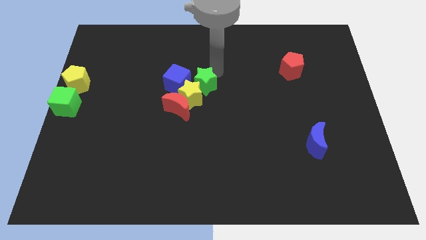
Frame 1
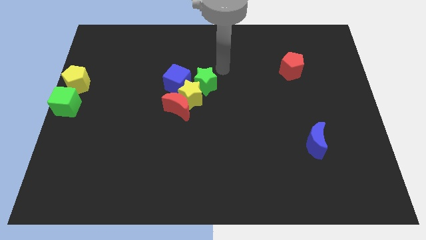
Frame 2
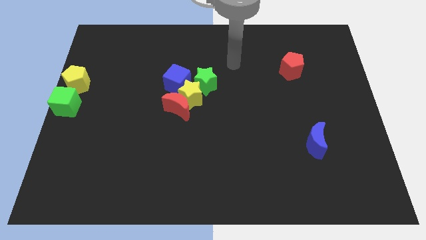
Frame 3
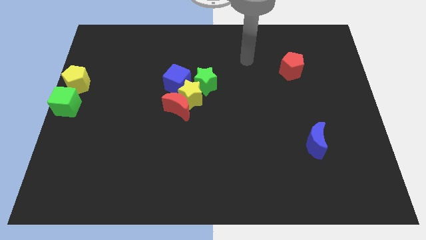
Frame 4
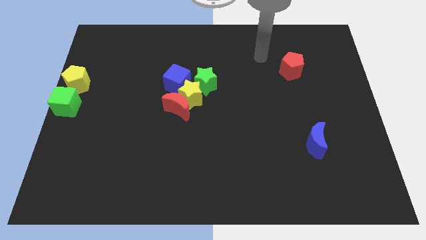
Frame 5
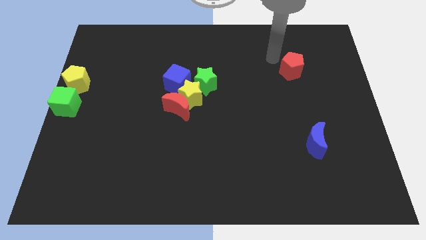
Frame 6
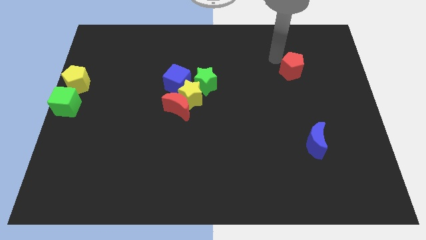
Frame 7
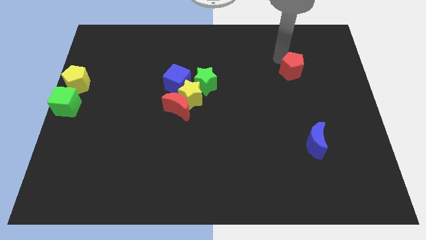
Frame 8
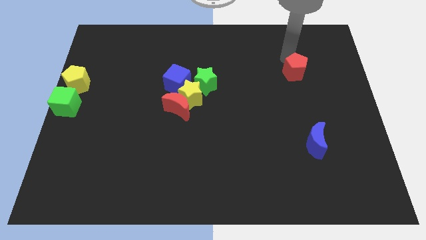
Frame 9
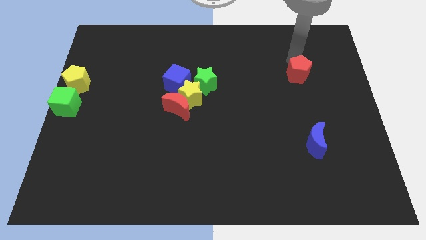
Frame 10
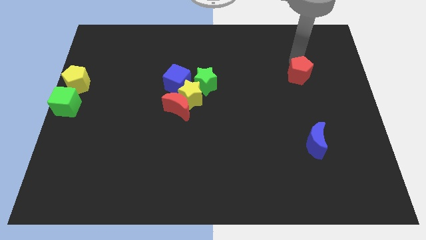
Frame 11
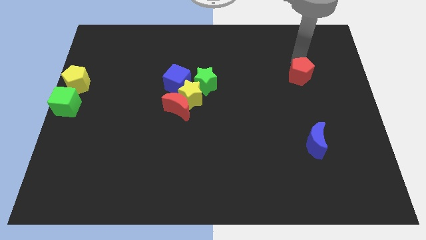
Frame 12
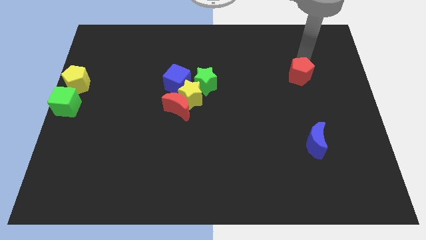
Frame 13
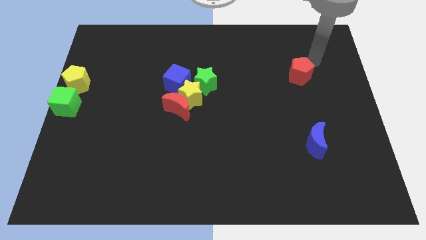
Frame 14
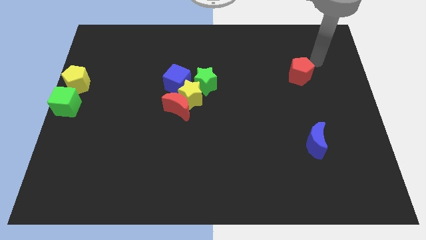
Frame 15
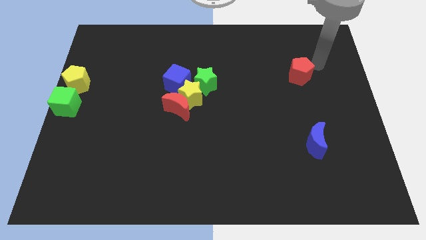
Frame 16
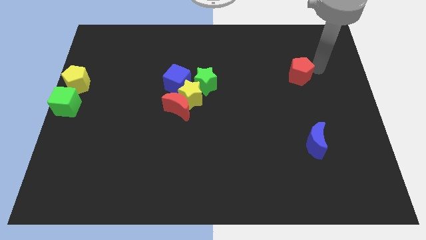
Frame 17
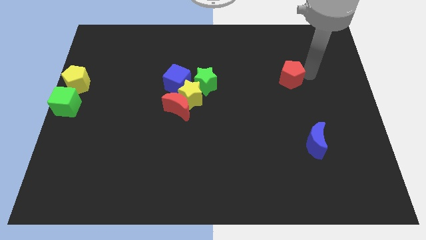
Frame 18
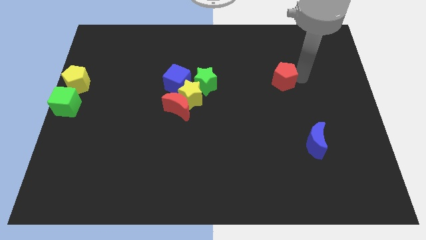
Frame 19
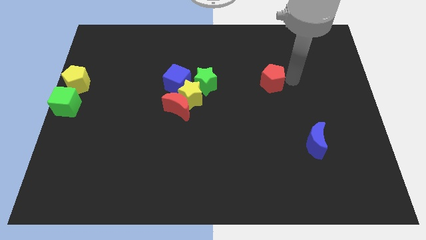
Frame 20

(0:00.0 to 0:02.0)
push the red pentagon diagonally to red crescent

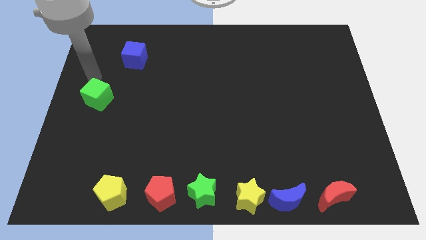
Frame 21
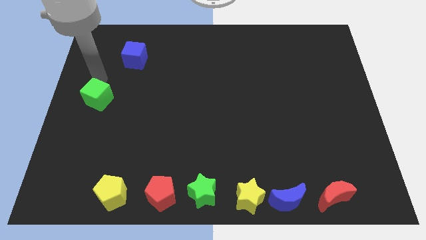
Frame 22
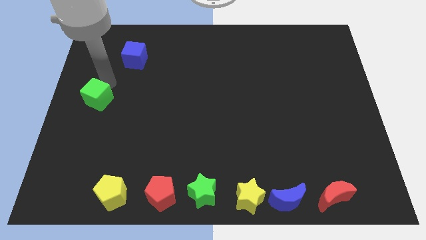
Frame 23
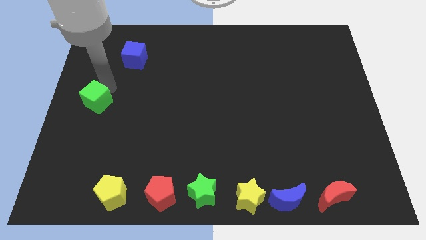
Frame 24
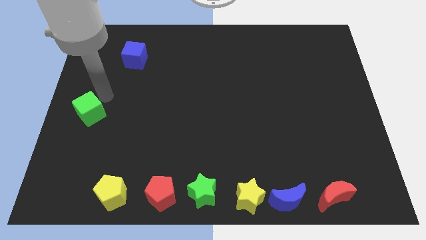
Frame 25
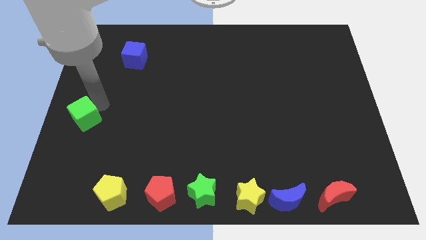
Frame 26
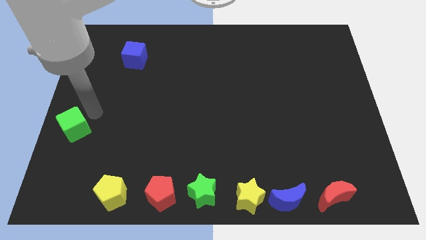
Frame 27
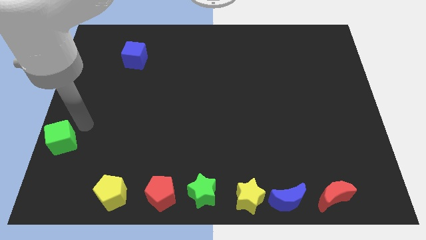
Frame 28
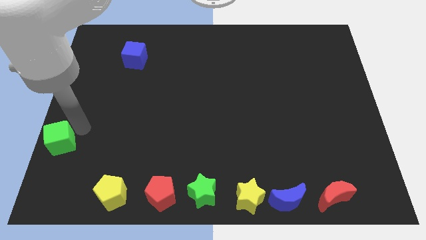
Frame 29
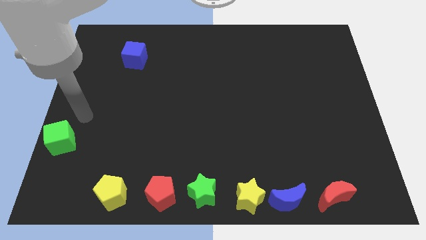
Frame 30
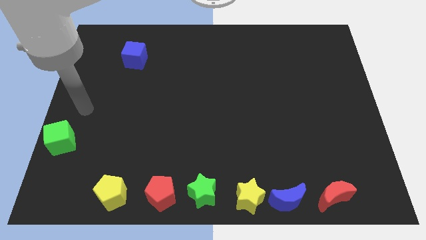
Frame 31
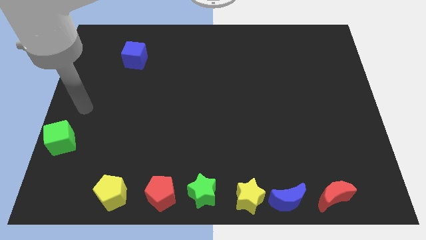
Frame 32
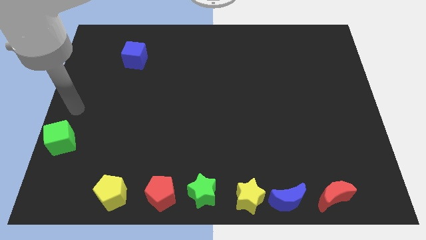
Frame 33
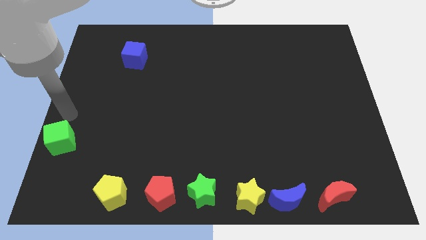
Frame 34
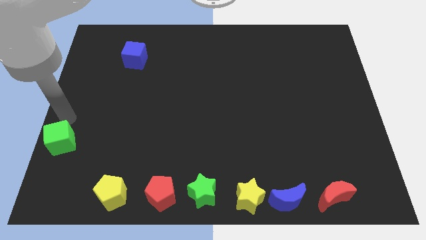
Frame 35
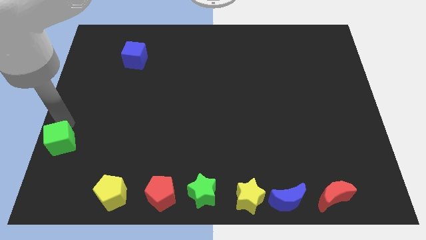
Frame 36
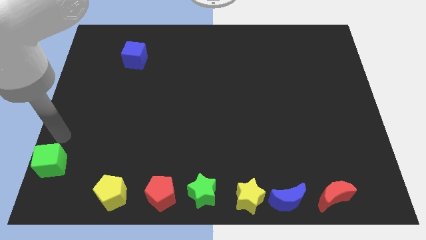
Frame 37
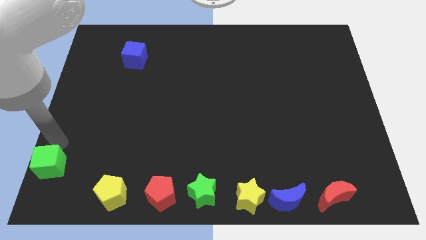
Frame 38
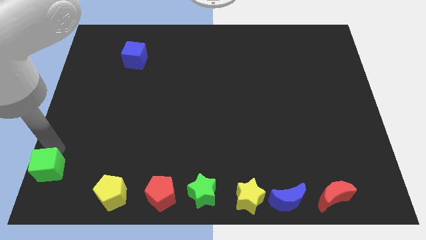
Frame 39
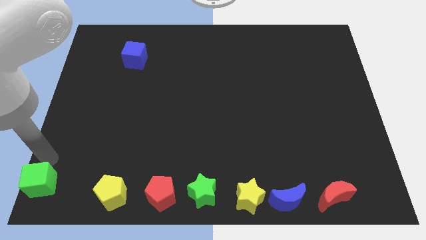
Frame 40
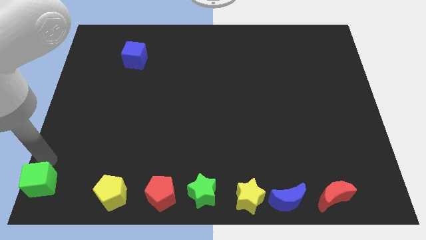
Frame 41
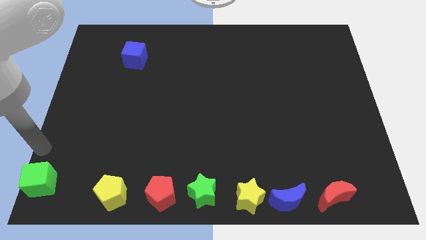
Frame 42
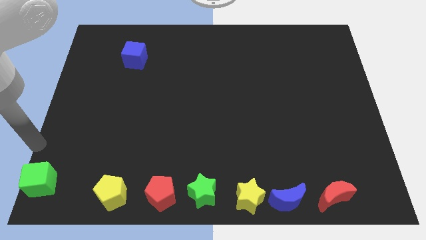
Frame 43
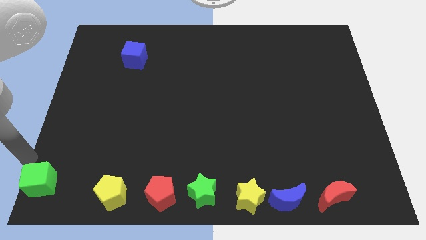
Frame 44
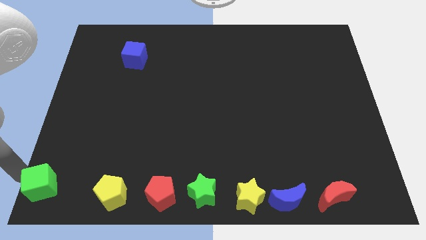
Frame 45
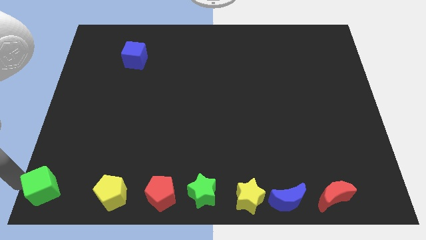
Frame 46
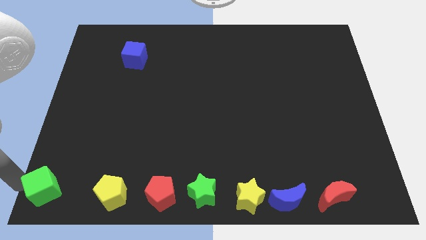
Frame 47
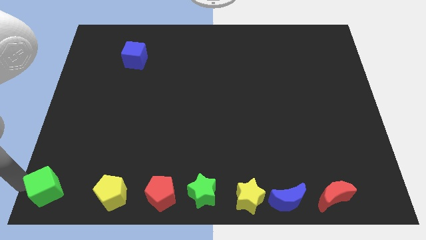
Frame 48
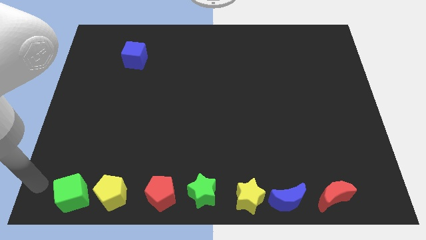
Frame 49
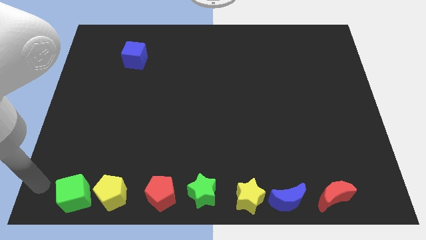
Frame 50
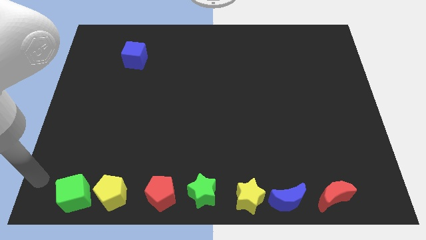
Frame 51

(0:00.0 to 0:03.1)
place the green cube at the bottom left of the board leftwards the yellow pentagon

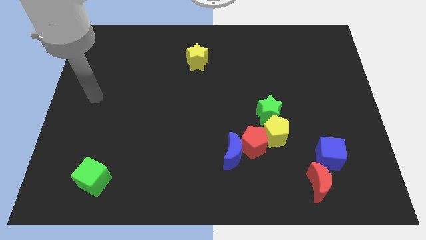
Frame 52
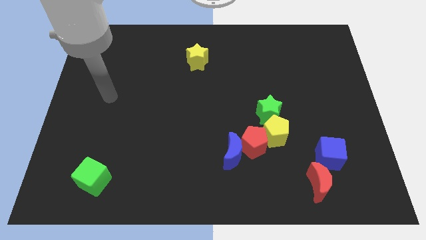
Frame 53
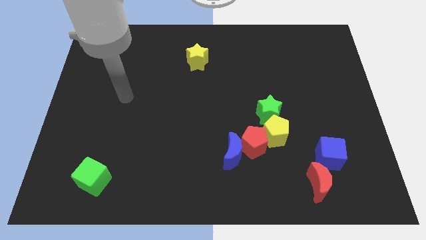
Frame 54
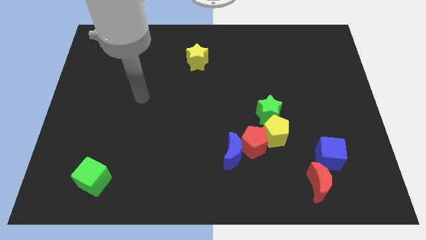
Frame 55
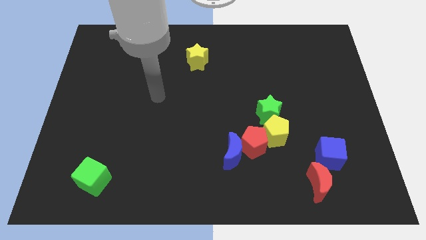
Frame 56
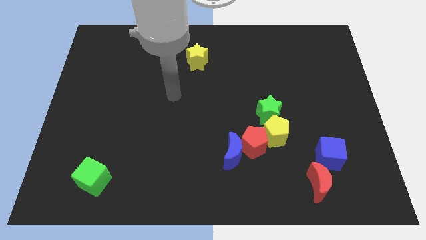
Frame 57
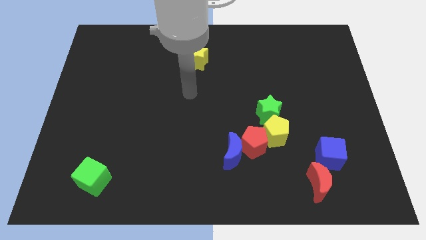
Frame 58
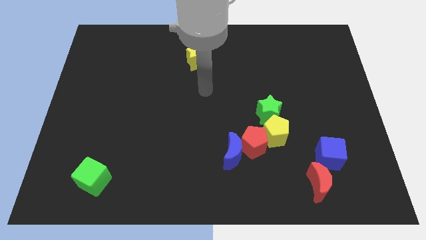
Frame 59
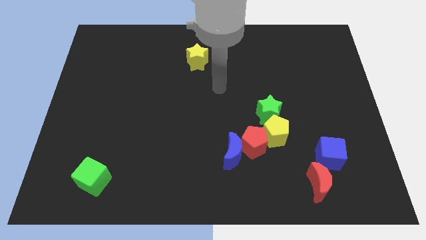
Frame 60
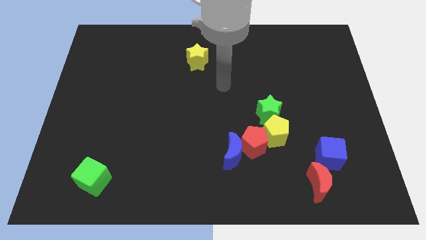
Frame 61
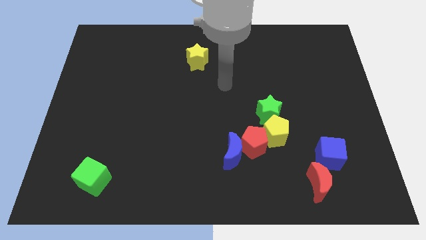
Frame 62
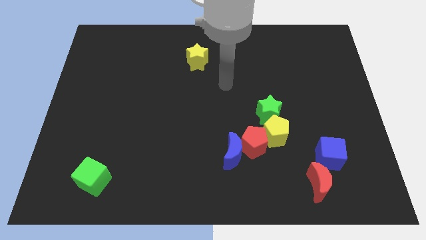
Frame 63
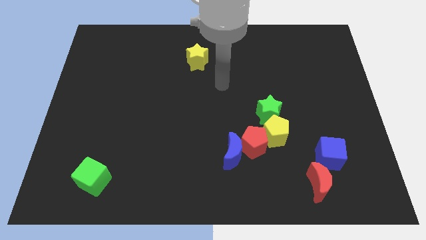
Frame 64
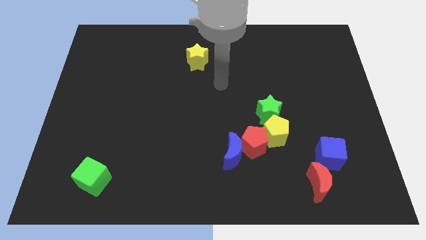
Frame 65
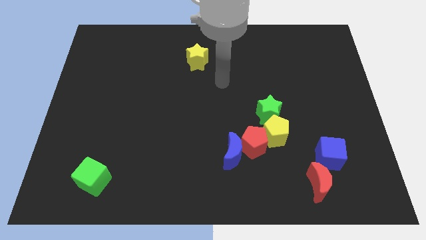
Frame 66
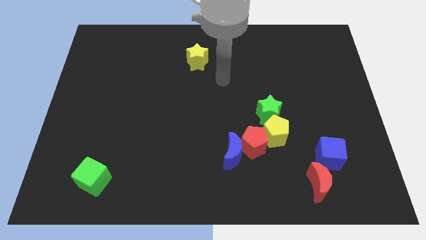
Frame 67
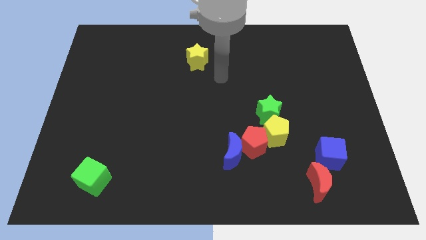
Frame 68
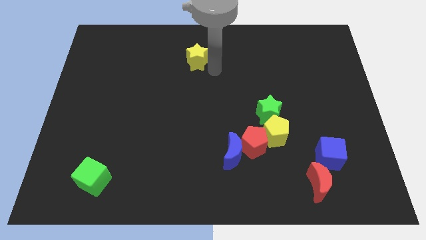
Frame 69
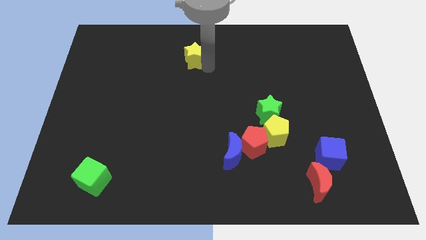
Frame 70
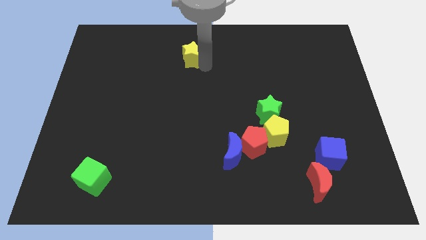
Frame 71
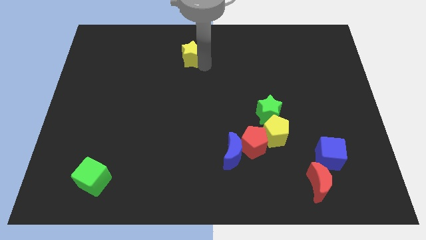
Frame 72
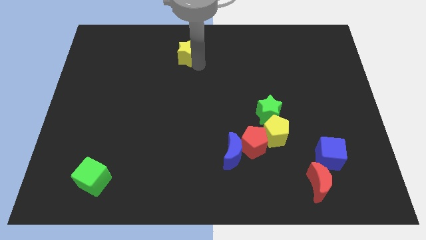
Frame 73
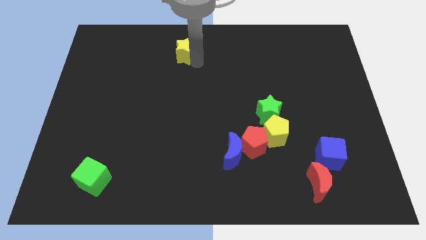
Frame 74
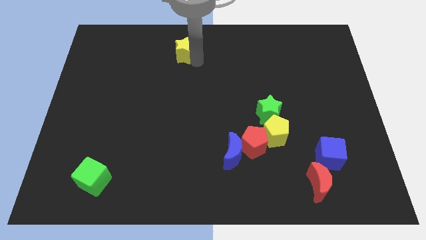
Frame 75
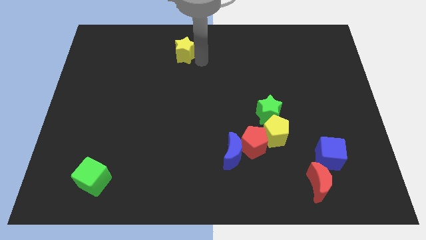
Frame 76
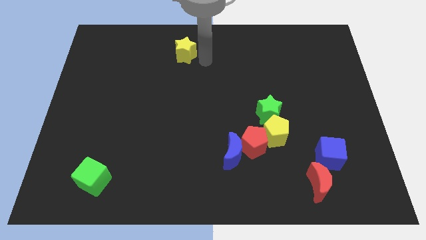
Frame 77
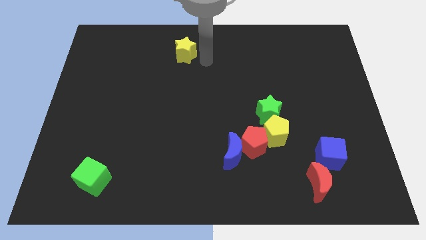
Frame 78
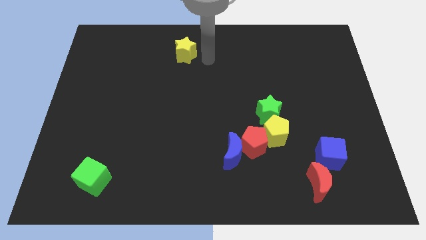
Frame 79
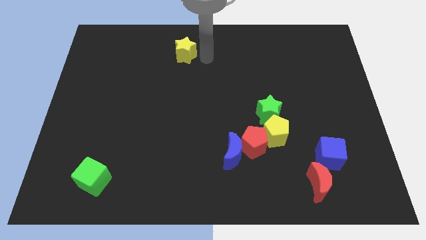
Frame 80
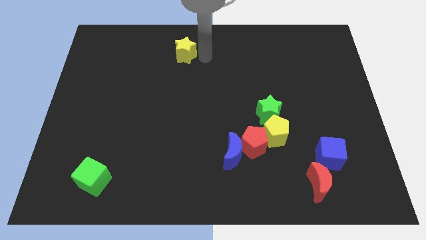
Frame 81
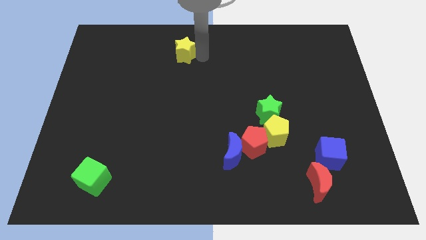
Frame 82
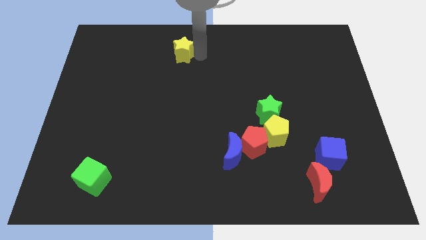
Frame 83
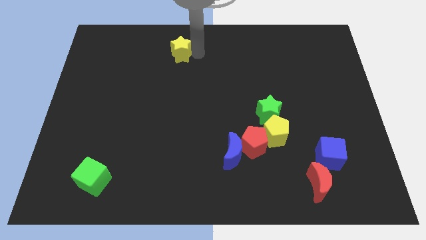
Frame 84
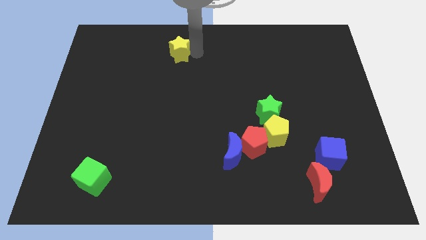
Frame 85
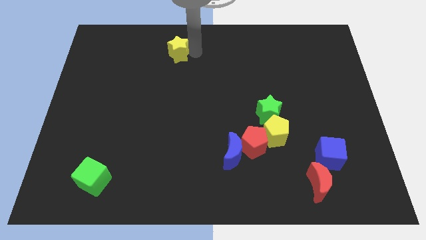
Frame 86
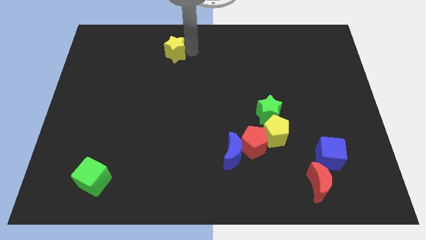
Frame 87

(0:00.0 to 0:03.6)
push the yellow star slightly to the left

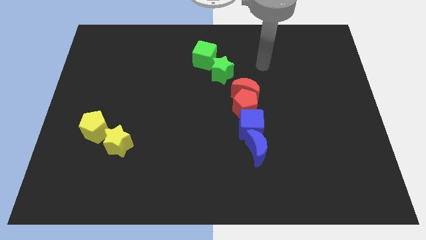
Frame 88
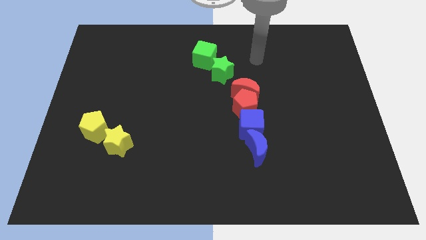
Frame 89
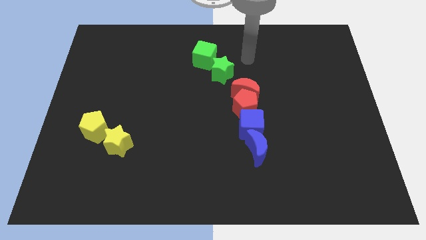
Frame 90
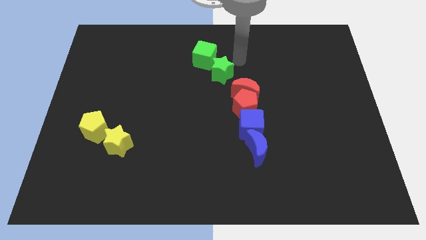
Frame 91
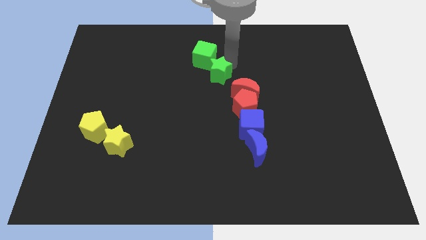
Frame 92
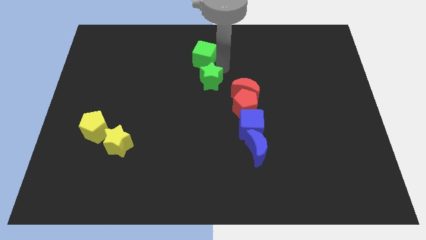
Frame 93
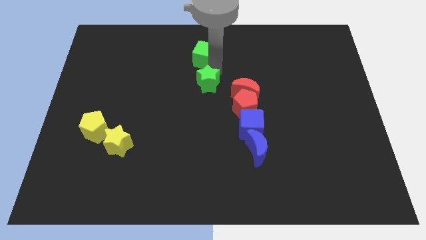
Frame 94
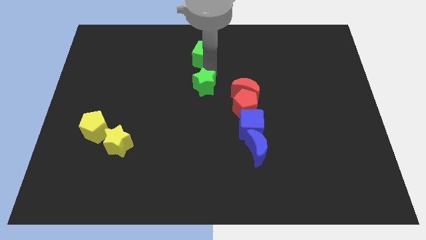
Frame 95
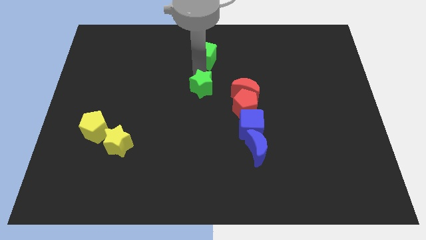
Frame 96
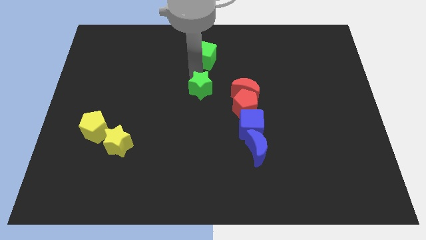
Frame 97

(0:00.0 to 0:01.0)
separate the green star from the green cube
